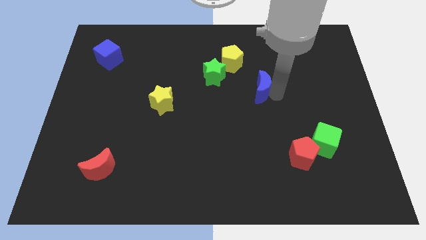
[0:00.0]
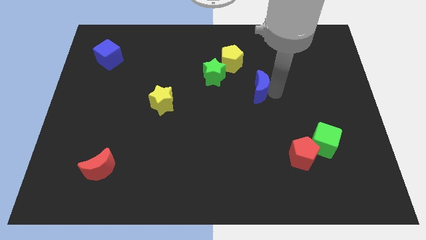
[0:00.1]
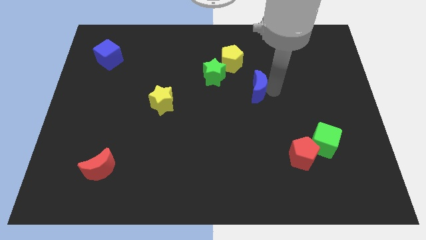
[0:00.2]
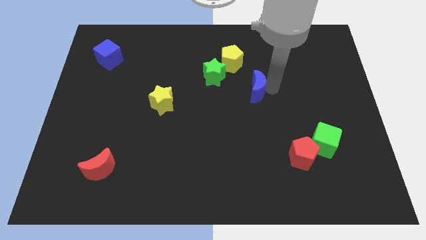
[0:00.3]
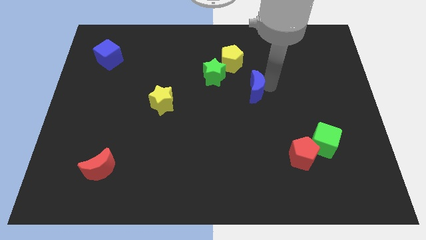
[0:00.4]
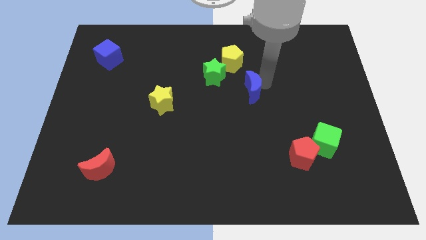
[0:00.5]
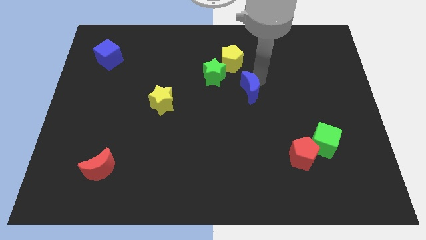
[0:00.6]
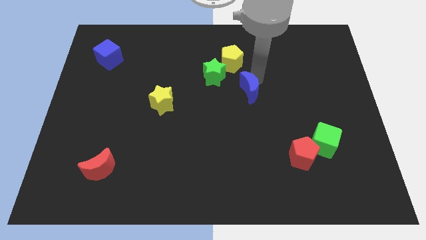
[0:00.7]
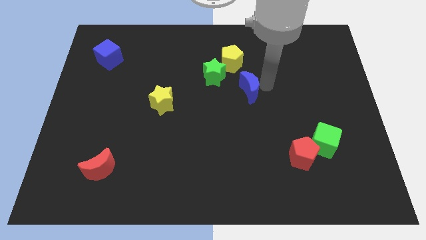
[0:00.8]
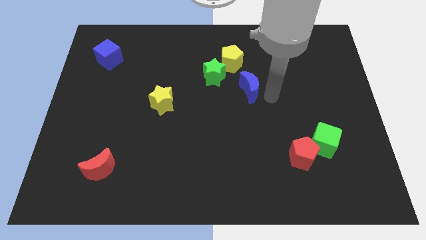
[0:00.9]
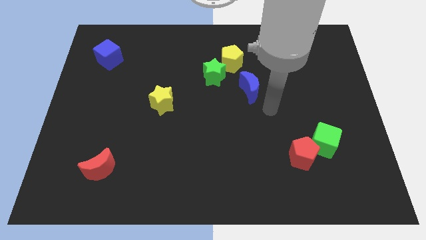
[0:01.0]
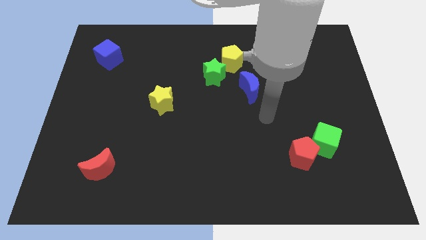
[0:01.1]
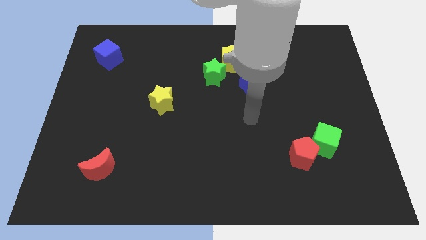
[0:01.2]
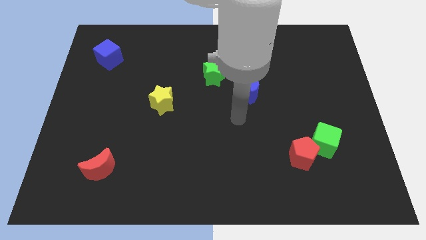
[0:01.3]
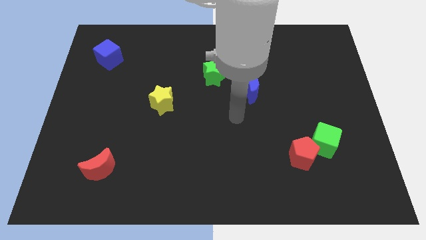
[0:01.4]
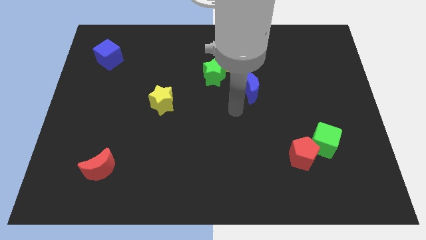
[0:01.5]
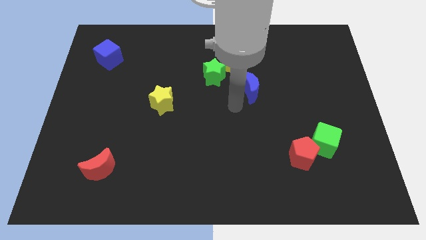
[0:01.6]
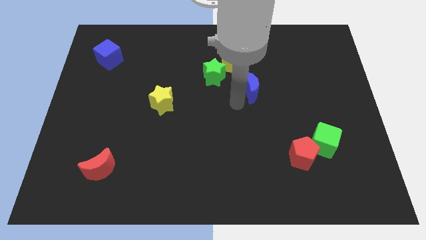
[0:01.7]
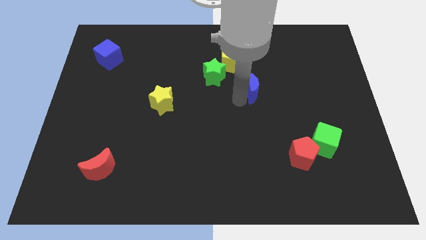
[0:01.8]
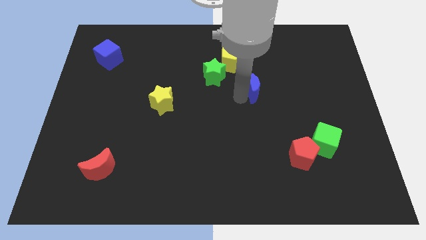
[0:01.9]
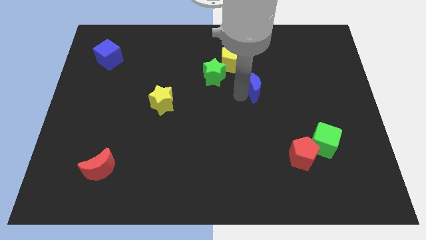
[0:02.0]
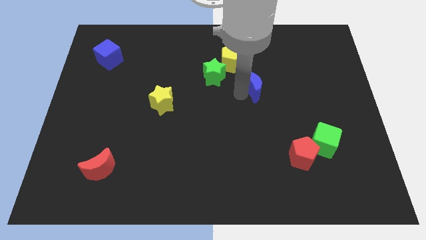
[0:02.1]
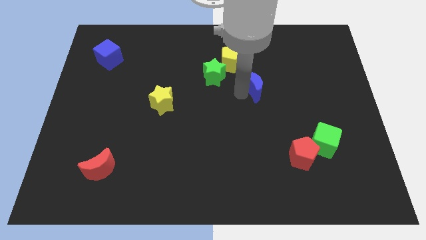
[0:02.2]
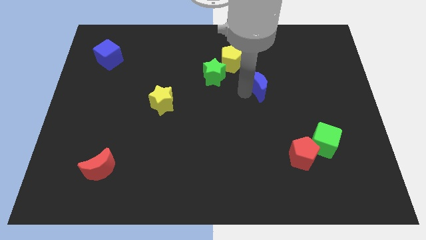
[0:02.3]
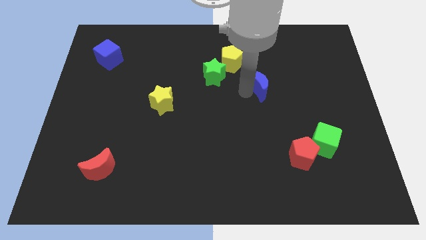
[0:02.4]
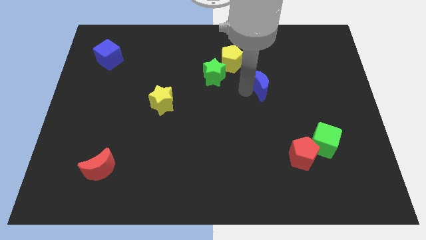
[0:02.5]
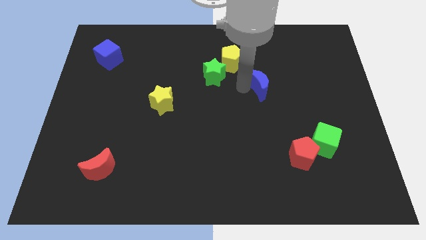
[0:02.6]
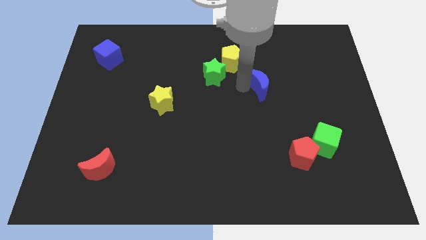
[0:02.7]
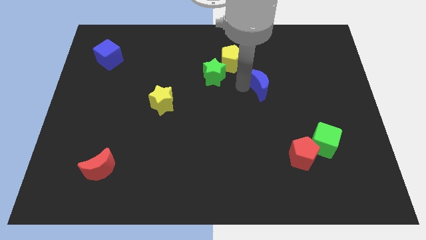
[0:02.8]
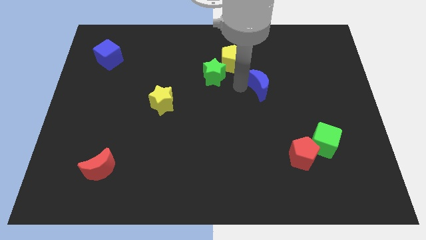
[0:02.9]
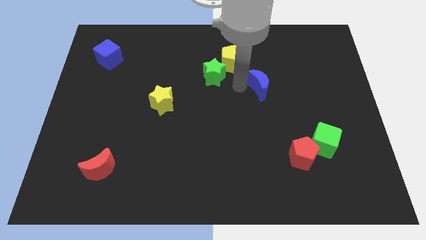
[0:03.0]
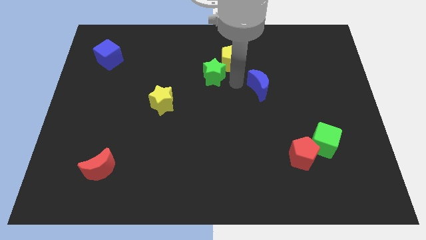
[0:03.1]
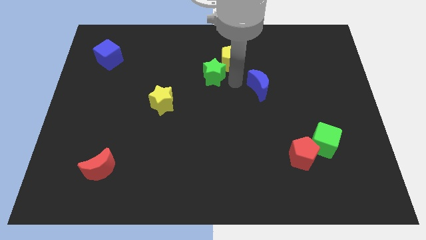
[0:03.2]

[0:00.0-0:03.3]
make a triangle with a blue crescent and yellow pentagon with green star

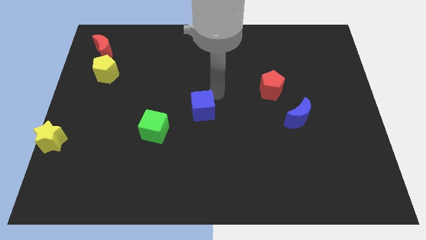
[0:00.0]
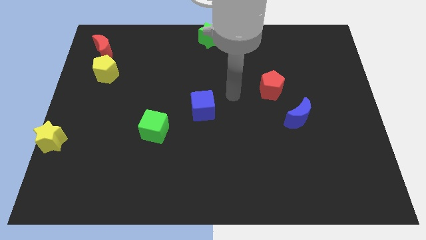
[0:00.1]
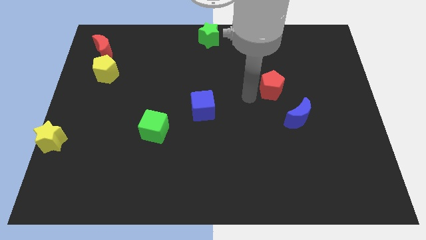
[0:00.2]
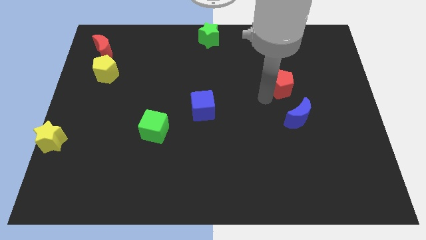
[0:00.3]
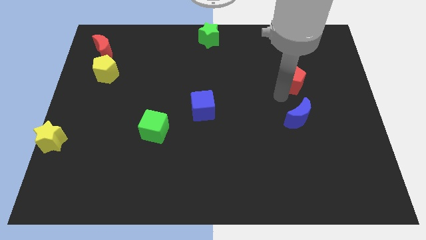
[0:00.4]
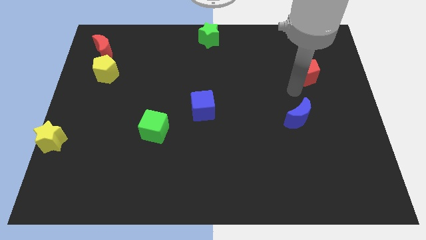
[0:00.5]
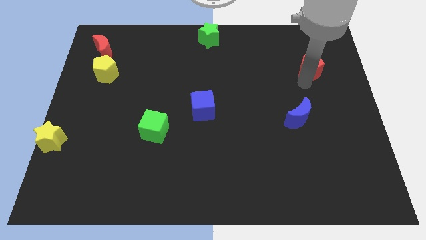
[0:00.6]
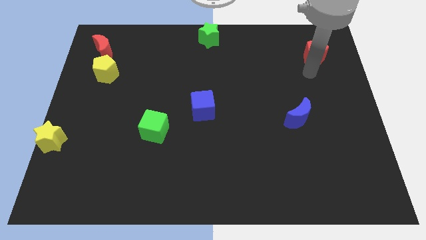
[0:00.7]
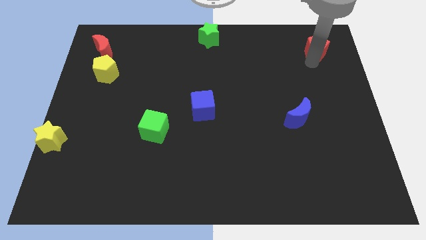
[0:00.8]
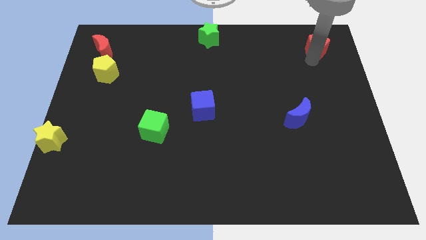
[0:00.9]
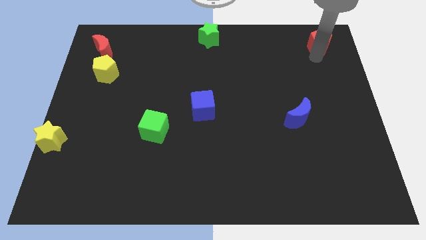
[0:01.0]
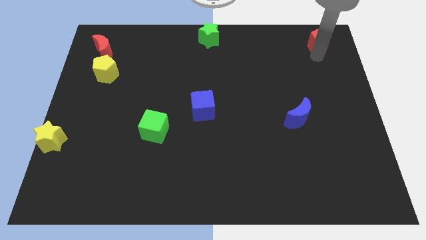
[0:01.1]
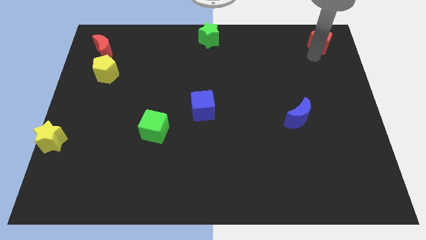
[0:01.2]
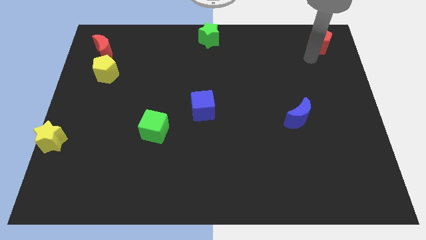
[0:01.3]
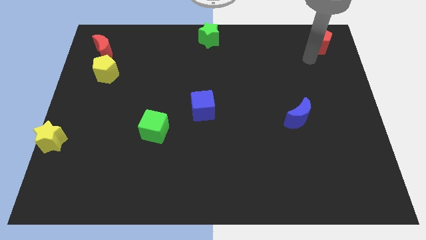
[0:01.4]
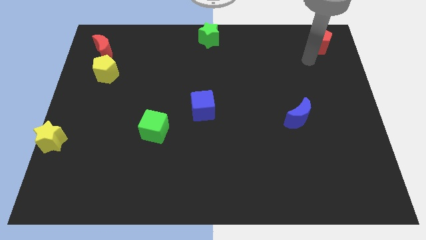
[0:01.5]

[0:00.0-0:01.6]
move the red pentagon to the top right corner of the board

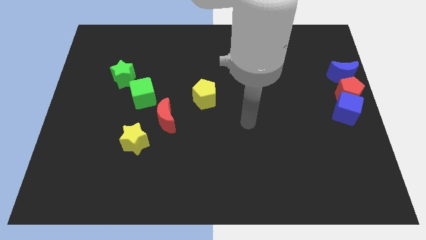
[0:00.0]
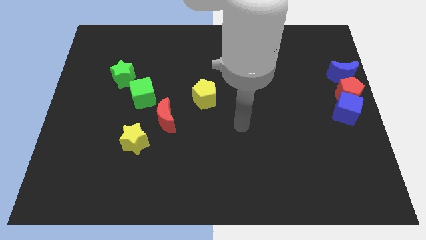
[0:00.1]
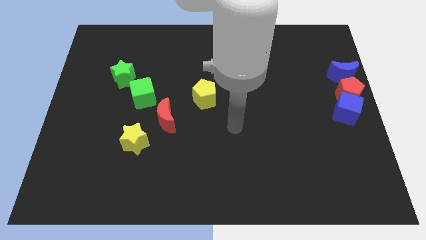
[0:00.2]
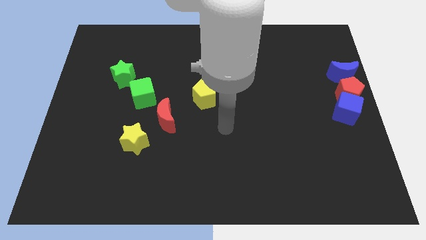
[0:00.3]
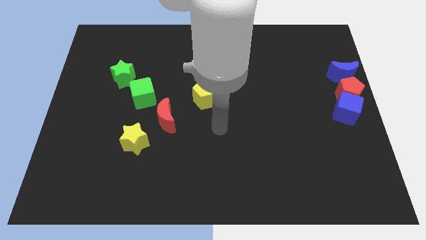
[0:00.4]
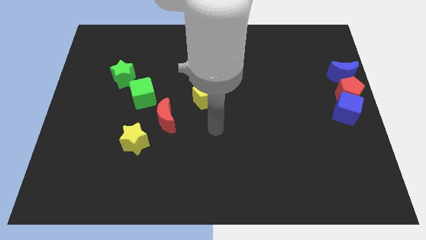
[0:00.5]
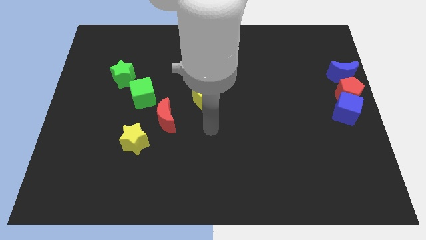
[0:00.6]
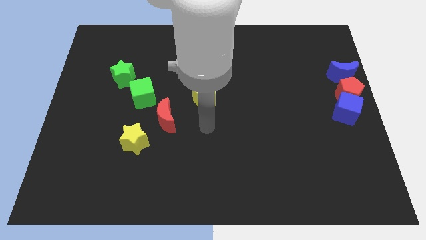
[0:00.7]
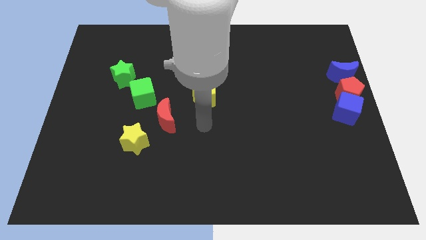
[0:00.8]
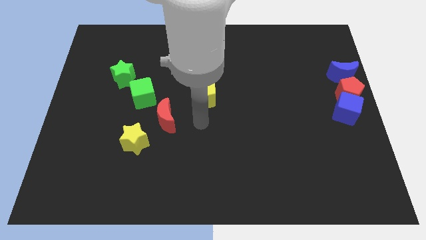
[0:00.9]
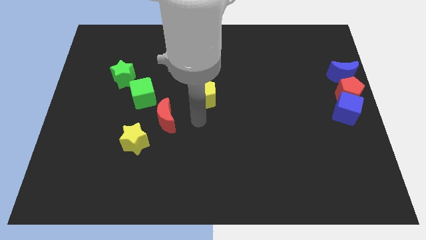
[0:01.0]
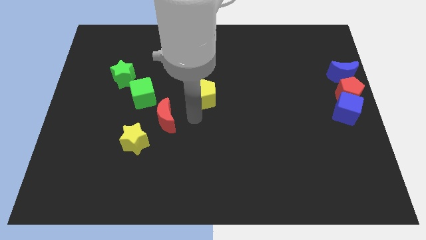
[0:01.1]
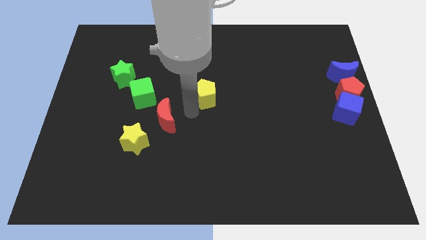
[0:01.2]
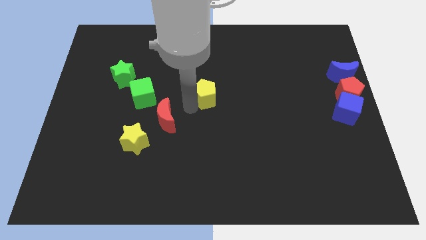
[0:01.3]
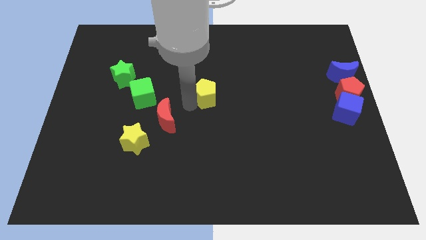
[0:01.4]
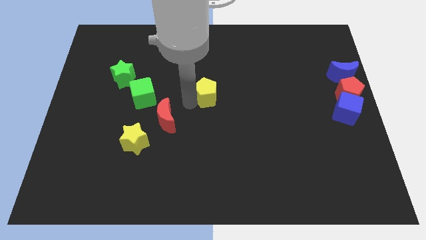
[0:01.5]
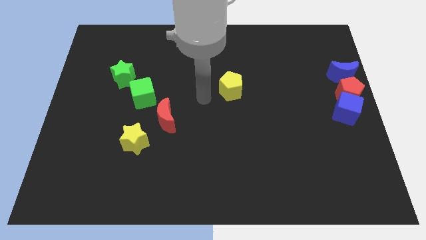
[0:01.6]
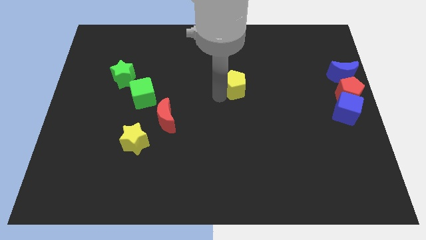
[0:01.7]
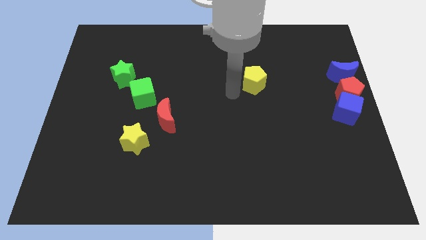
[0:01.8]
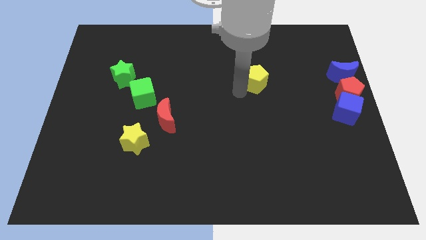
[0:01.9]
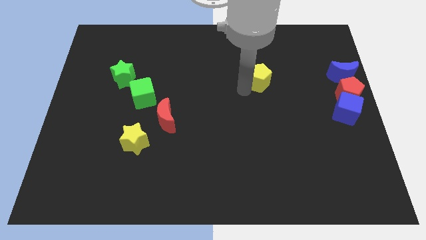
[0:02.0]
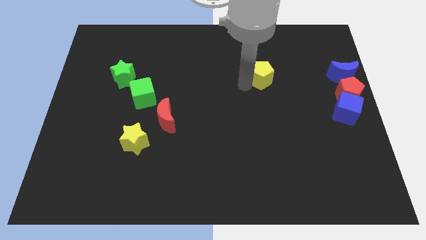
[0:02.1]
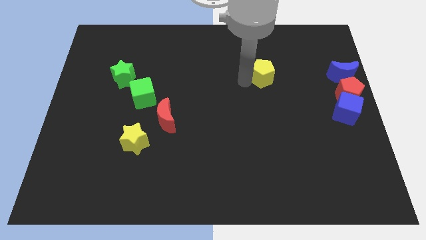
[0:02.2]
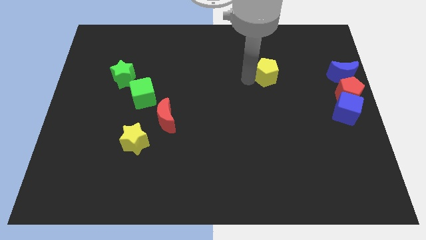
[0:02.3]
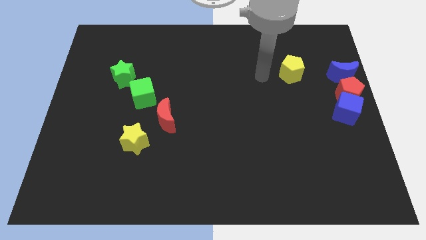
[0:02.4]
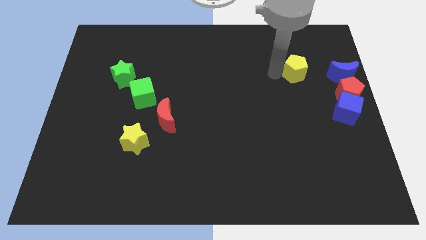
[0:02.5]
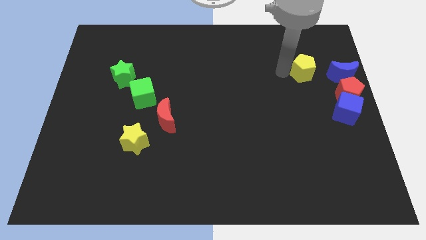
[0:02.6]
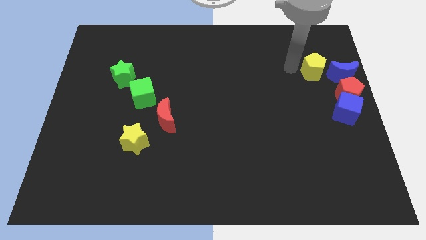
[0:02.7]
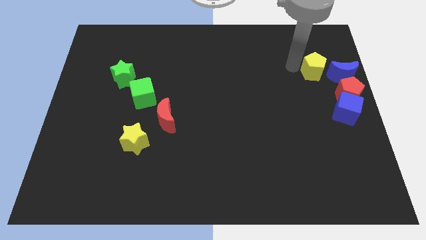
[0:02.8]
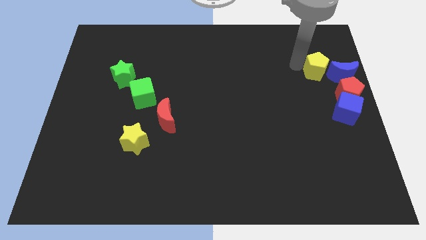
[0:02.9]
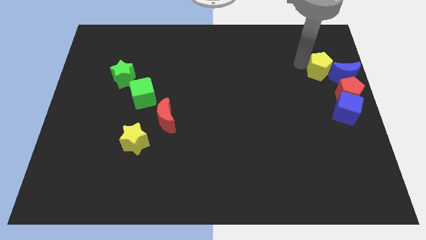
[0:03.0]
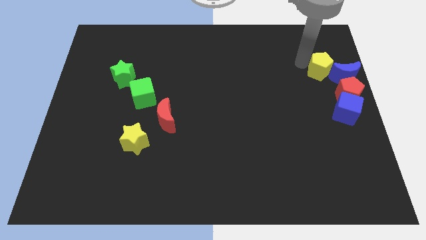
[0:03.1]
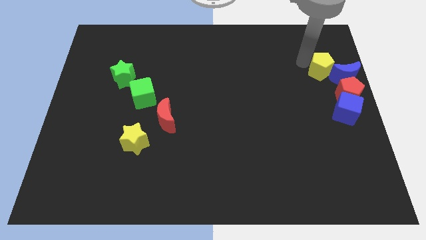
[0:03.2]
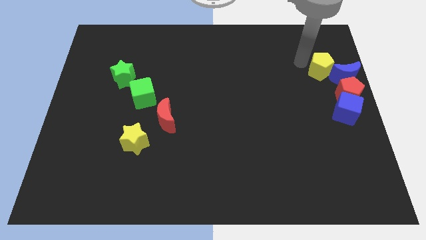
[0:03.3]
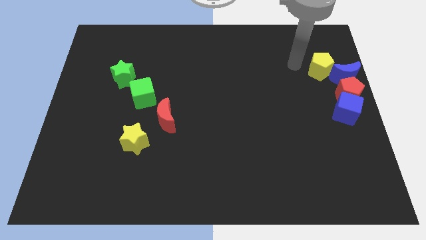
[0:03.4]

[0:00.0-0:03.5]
place the yellow pentagon into the blue moon to the left

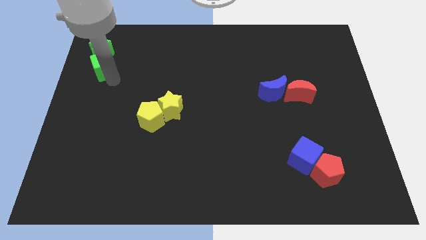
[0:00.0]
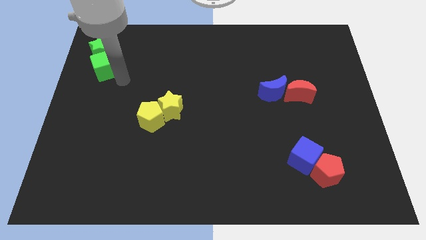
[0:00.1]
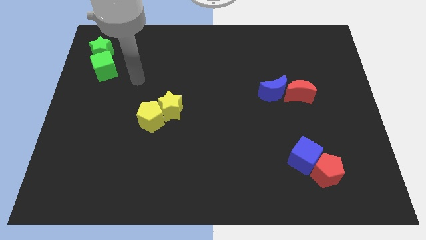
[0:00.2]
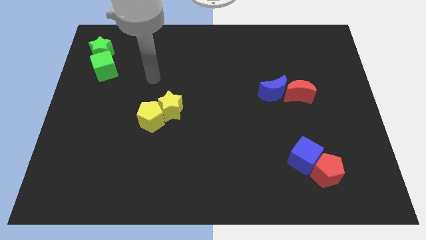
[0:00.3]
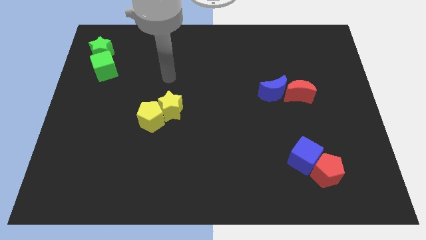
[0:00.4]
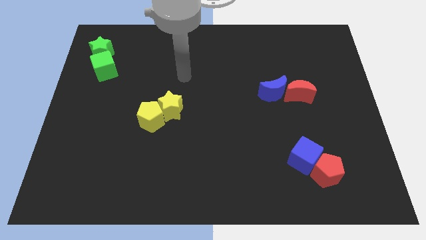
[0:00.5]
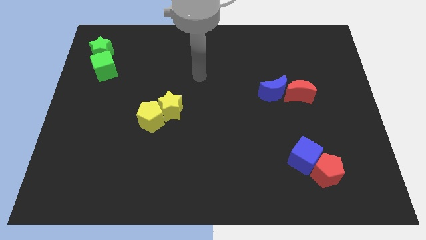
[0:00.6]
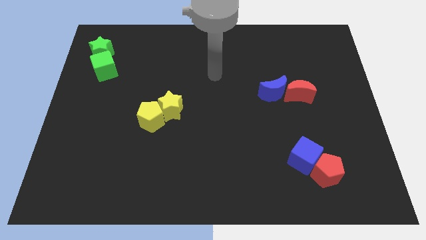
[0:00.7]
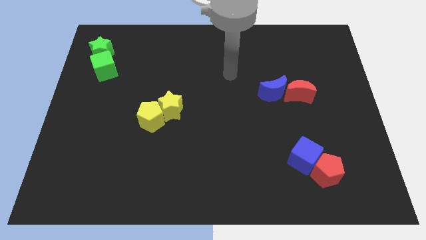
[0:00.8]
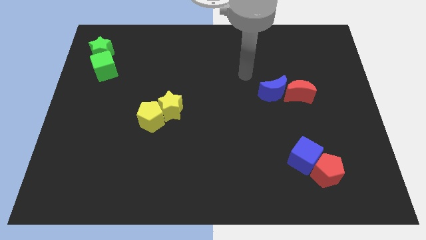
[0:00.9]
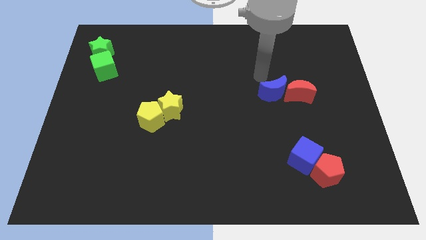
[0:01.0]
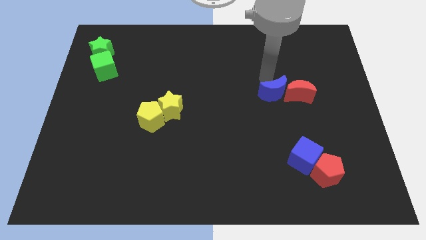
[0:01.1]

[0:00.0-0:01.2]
place your arm at the top of blue moon
